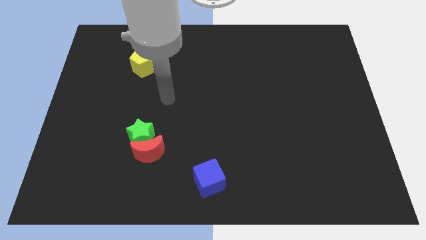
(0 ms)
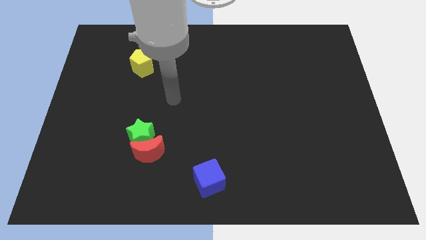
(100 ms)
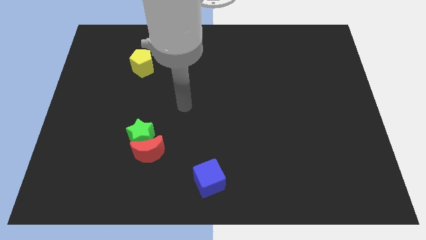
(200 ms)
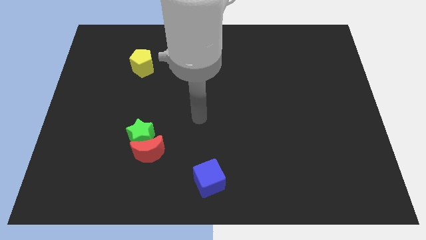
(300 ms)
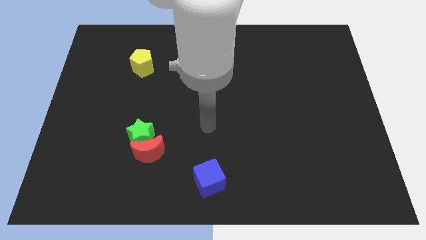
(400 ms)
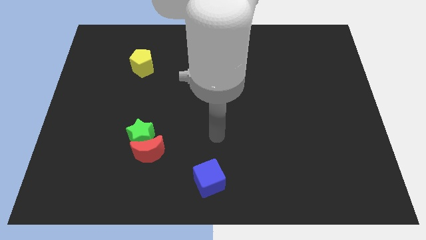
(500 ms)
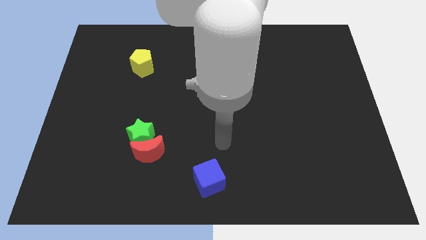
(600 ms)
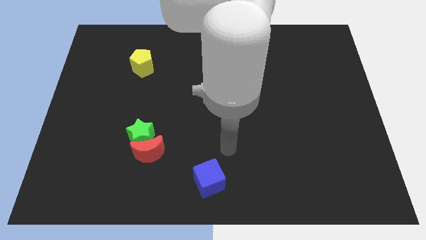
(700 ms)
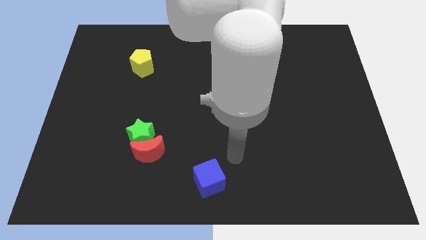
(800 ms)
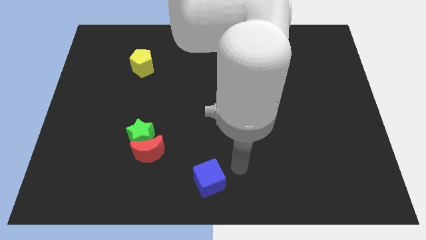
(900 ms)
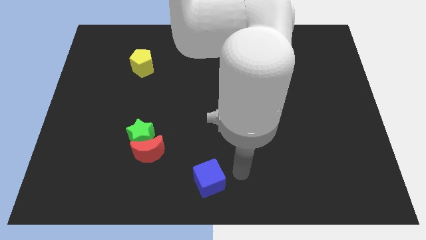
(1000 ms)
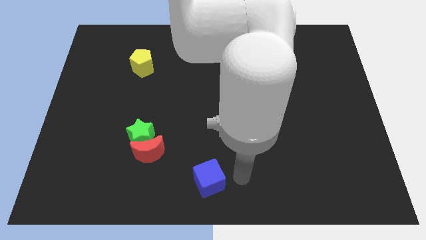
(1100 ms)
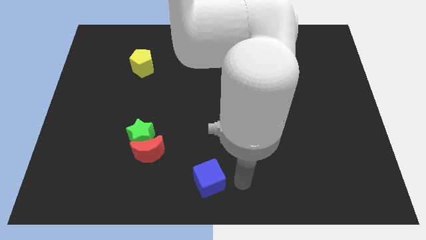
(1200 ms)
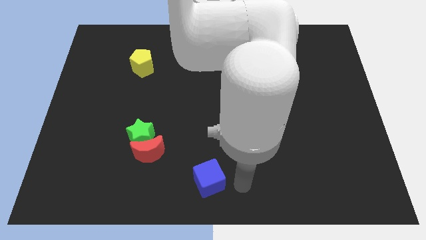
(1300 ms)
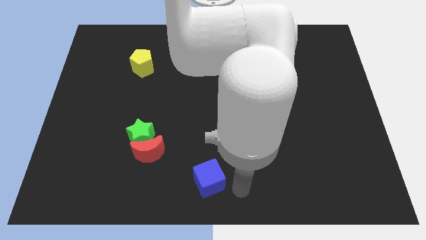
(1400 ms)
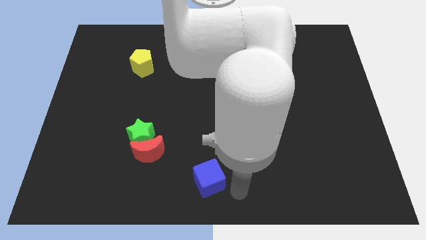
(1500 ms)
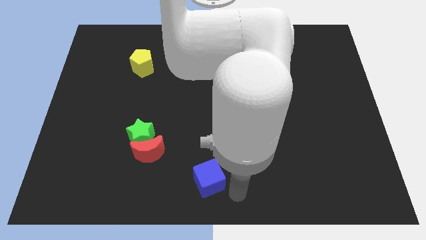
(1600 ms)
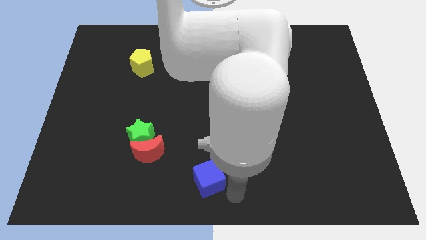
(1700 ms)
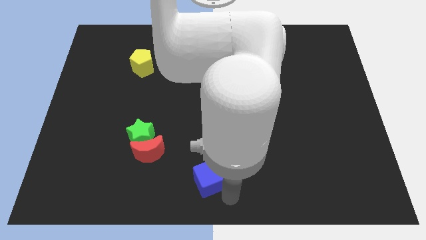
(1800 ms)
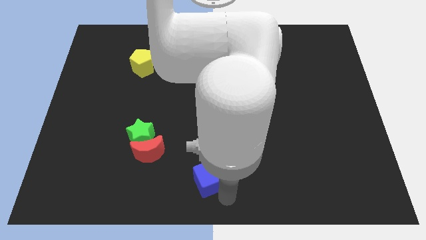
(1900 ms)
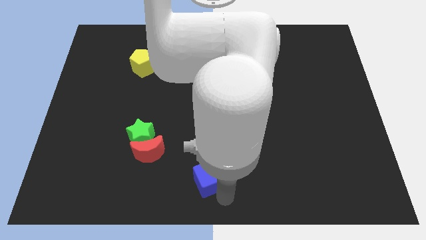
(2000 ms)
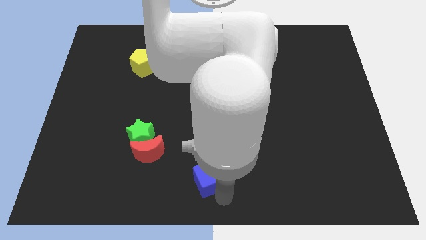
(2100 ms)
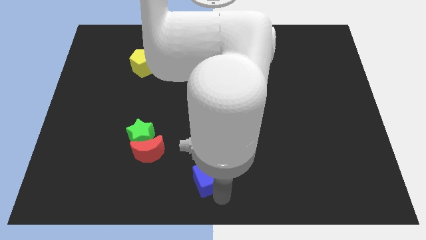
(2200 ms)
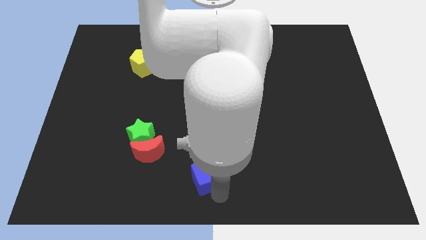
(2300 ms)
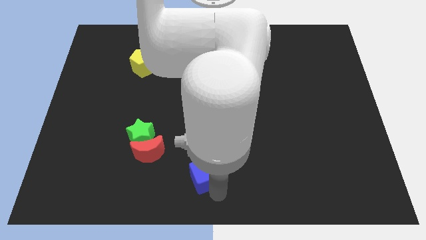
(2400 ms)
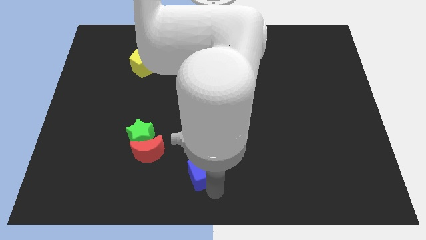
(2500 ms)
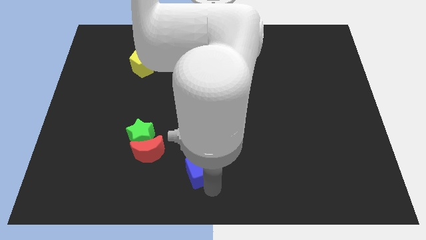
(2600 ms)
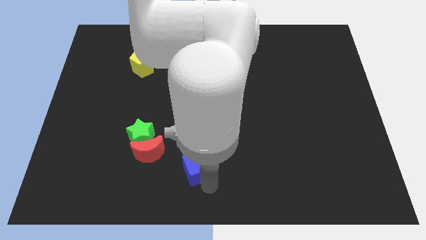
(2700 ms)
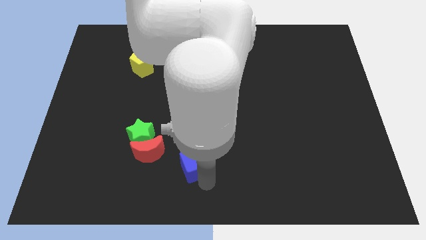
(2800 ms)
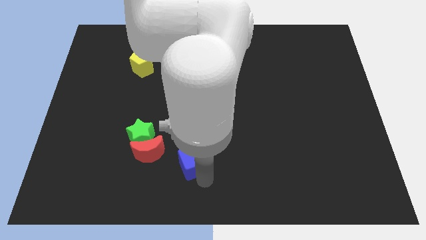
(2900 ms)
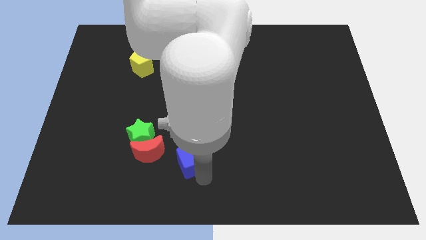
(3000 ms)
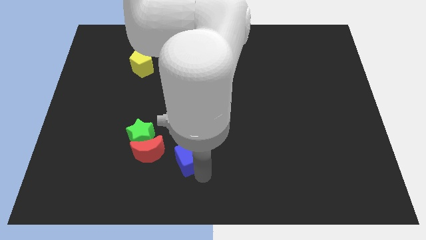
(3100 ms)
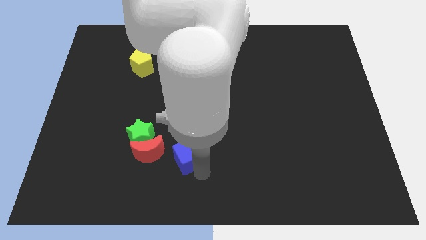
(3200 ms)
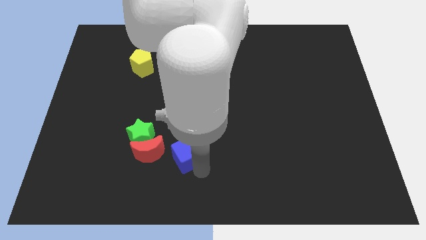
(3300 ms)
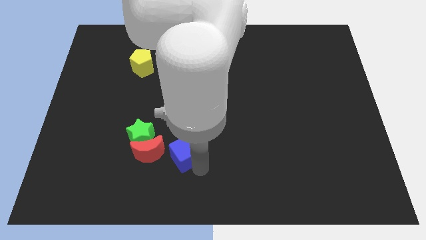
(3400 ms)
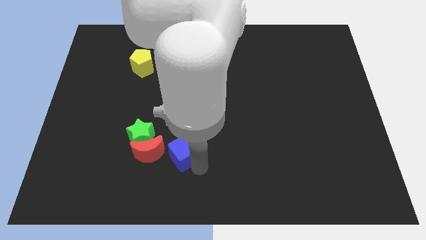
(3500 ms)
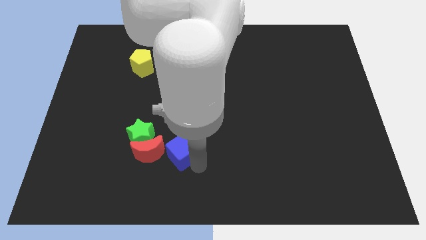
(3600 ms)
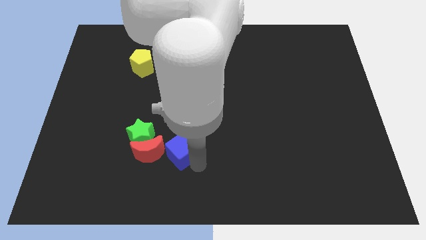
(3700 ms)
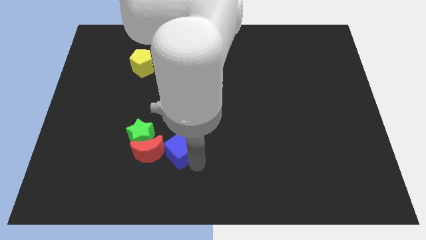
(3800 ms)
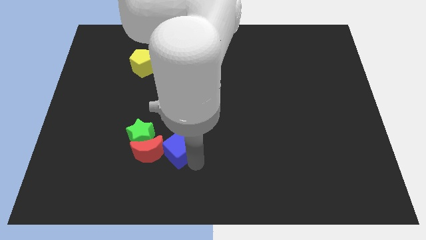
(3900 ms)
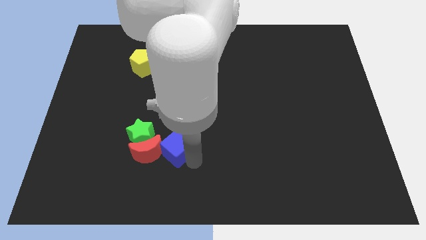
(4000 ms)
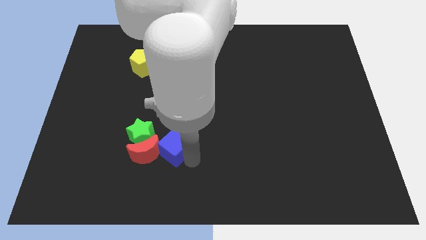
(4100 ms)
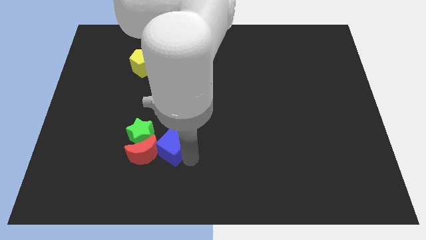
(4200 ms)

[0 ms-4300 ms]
slide the blue cube next to the moon

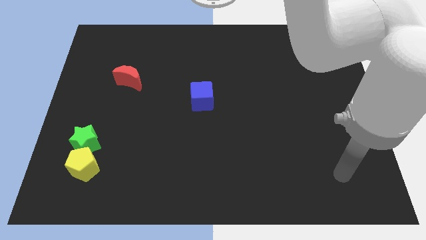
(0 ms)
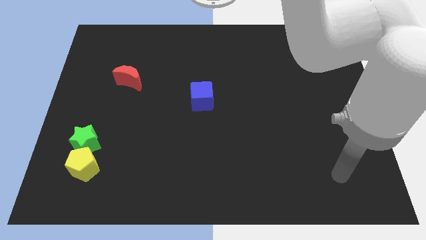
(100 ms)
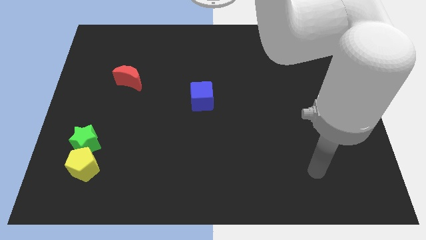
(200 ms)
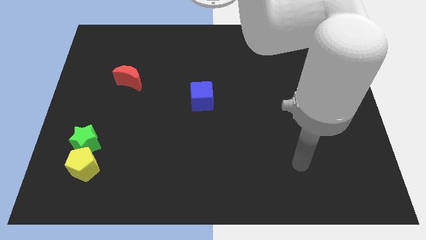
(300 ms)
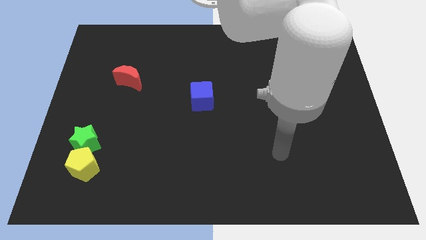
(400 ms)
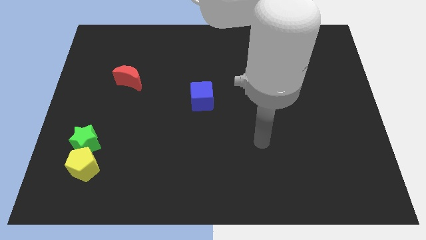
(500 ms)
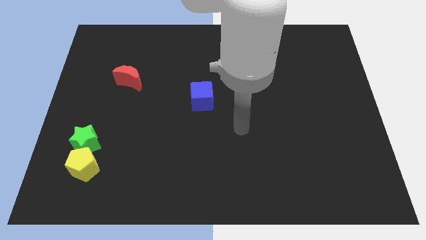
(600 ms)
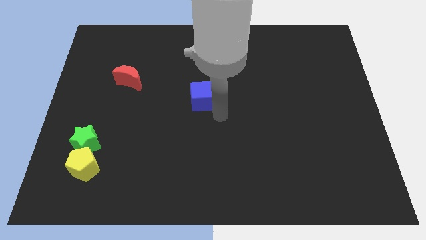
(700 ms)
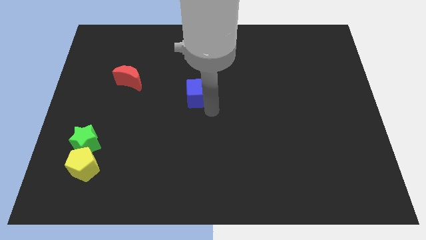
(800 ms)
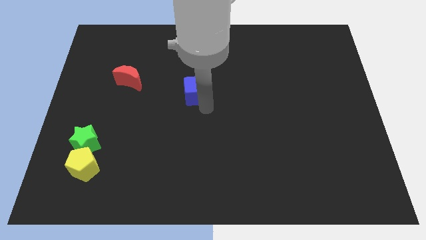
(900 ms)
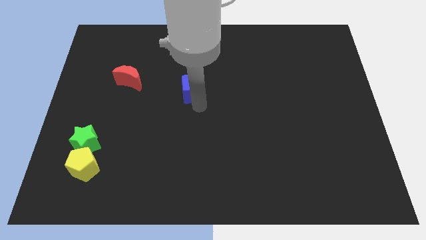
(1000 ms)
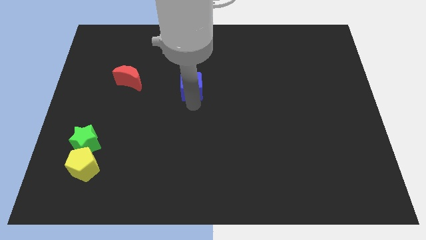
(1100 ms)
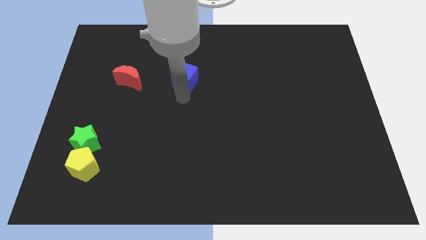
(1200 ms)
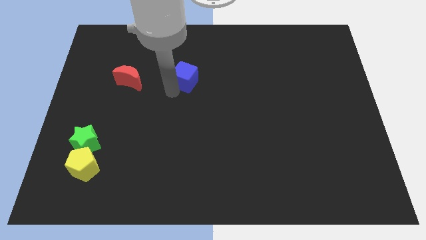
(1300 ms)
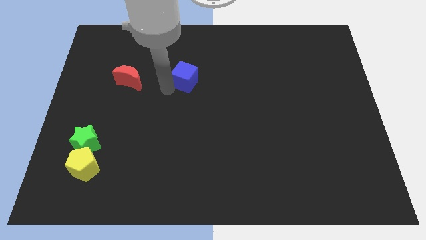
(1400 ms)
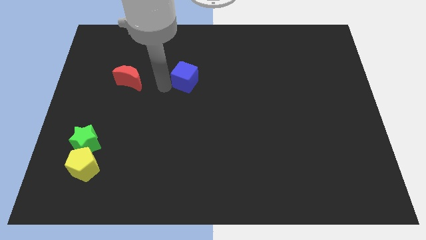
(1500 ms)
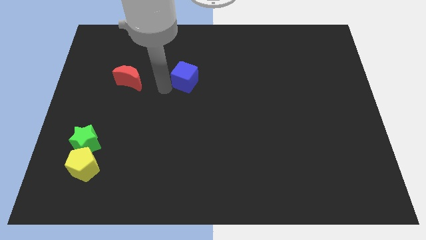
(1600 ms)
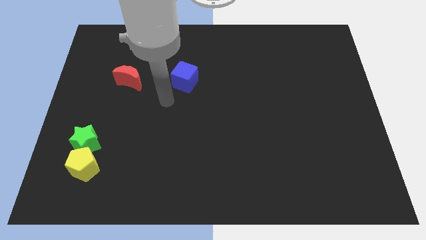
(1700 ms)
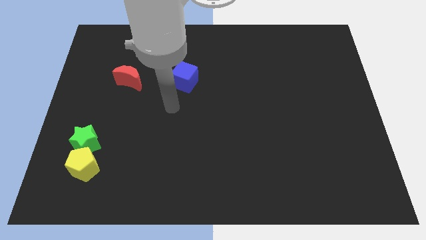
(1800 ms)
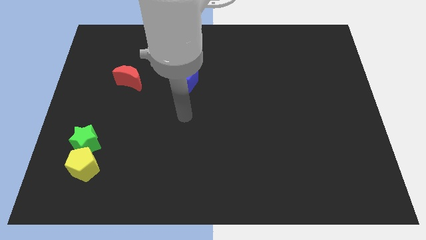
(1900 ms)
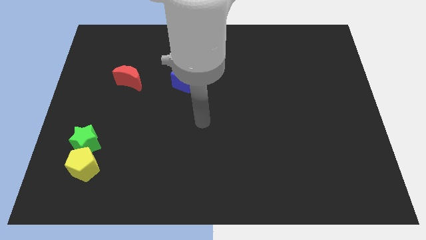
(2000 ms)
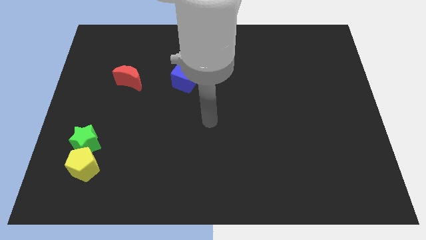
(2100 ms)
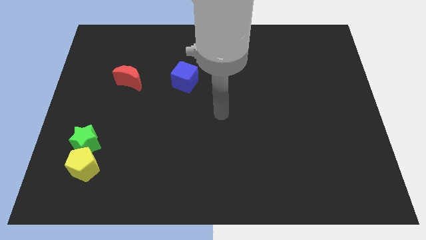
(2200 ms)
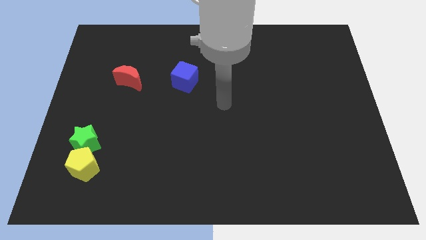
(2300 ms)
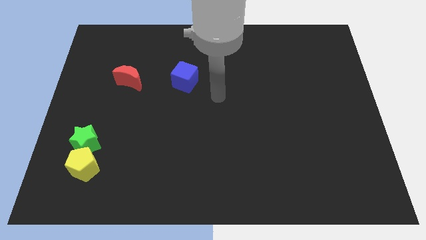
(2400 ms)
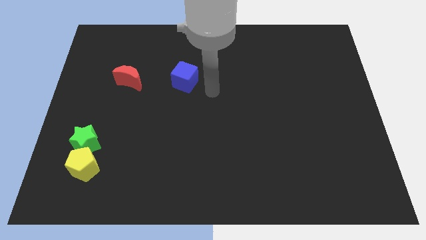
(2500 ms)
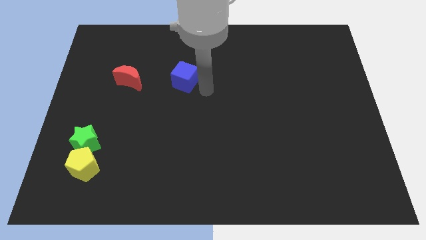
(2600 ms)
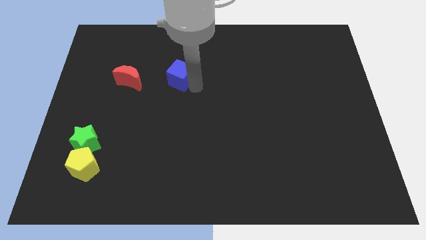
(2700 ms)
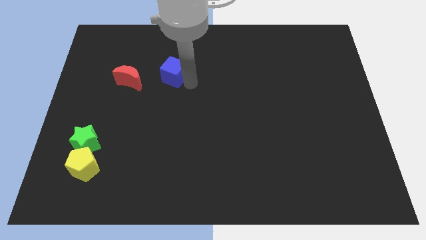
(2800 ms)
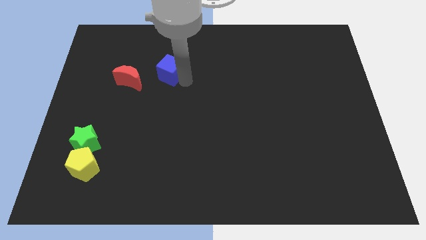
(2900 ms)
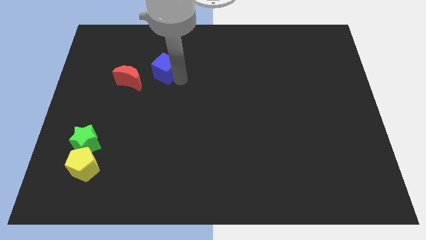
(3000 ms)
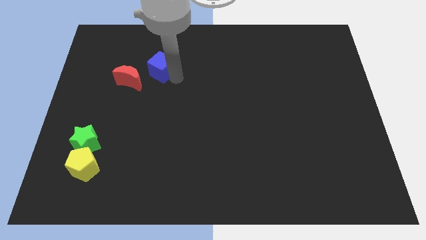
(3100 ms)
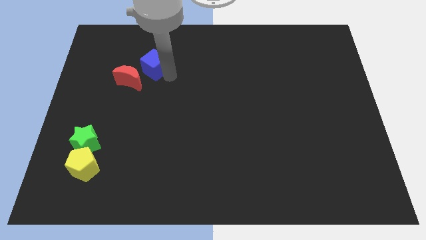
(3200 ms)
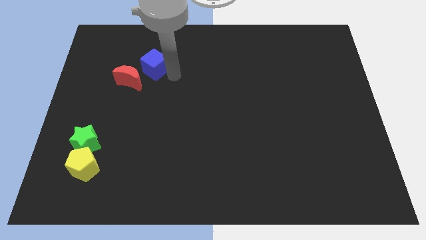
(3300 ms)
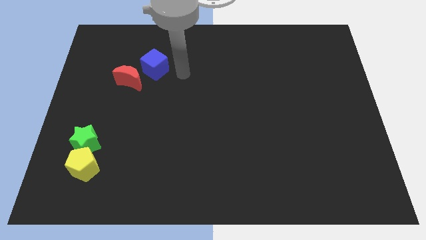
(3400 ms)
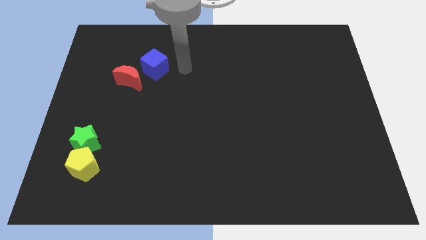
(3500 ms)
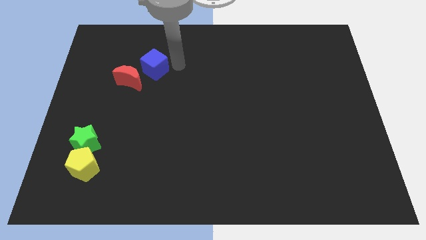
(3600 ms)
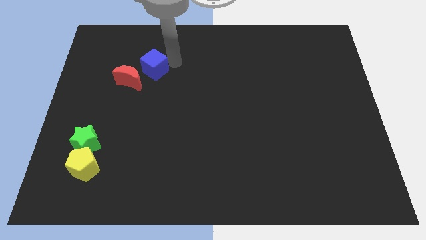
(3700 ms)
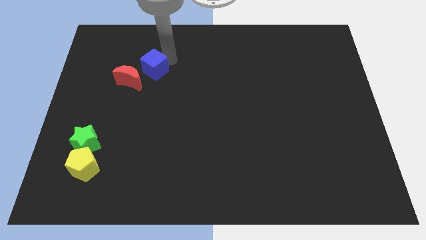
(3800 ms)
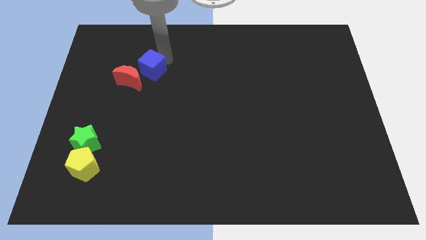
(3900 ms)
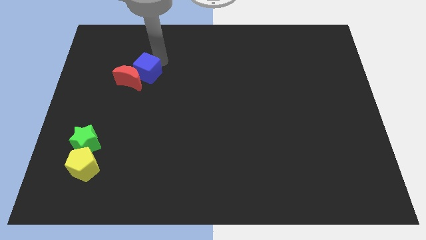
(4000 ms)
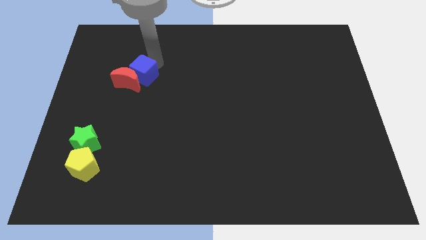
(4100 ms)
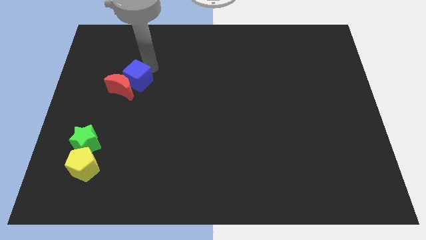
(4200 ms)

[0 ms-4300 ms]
push the blue block close to the red block
